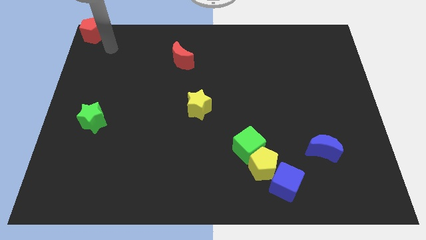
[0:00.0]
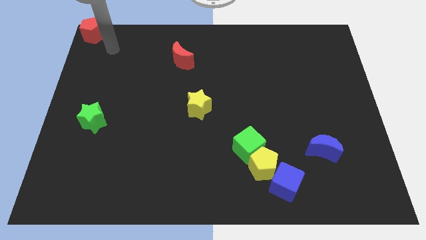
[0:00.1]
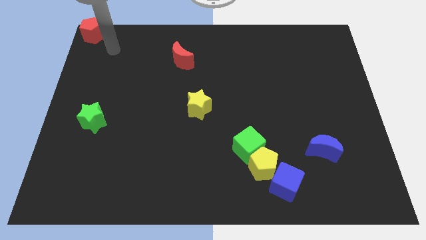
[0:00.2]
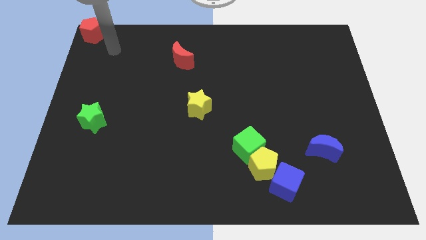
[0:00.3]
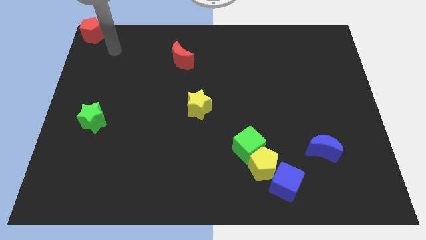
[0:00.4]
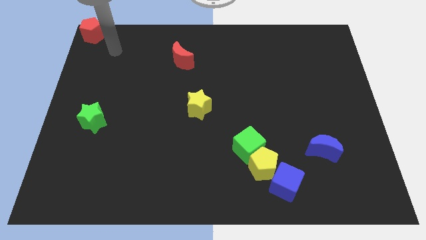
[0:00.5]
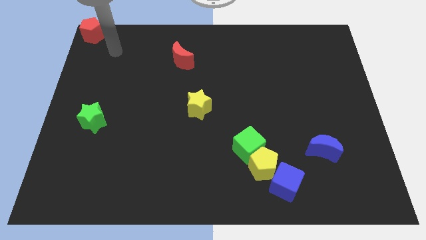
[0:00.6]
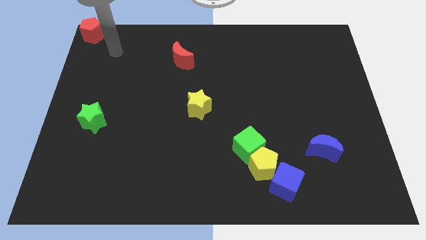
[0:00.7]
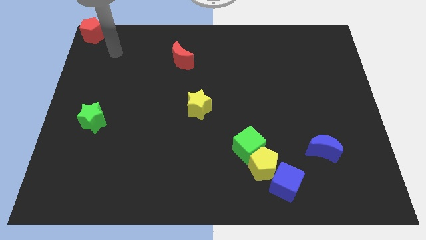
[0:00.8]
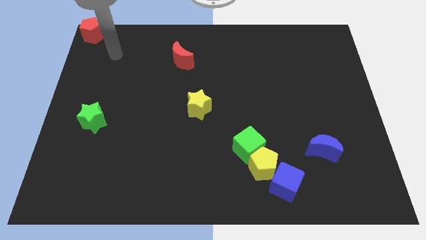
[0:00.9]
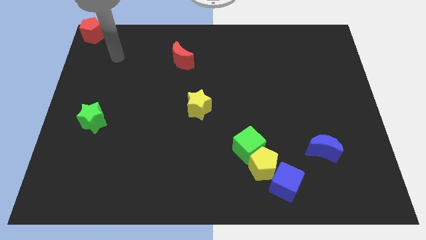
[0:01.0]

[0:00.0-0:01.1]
slide your arm away from red pentagon

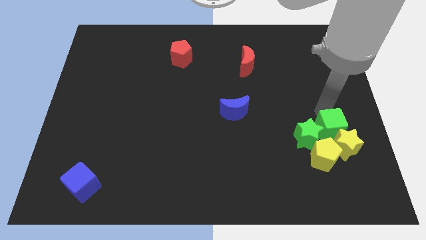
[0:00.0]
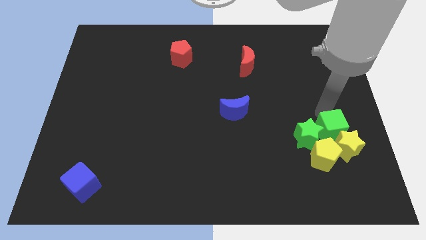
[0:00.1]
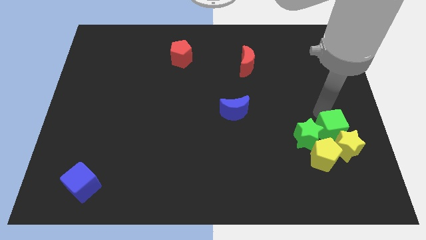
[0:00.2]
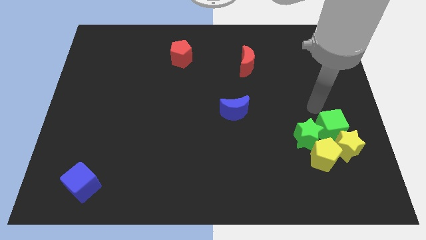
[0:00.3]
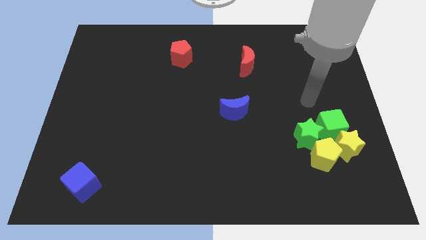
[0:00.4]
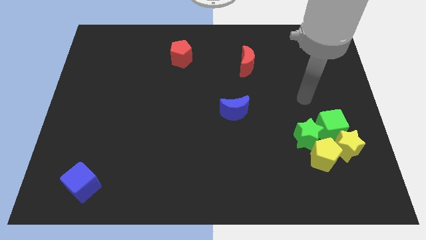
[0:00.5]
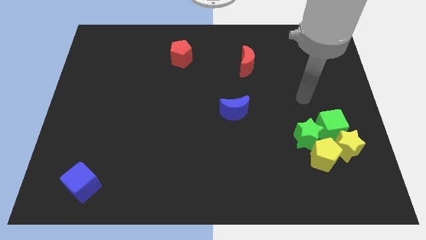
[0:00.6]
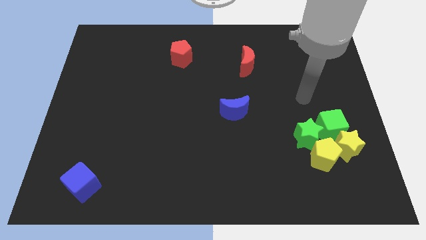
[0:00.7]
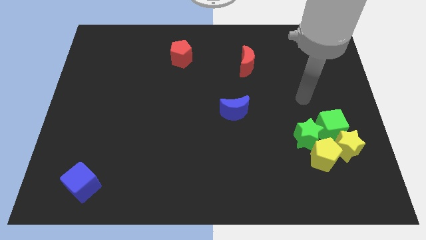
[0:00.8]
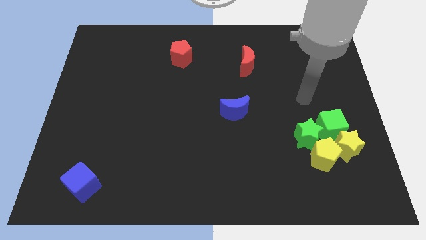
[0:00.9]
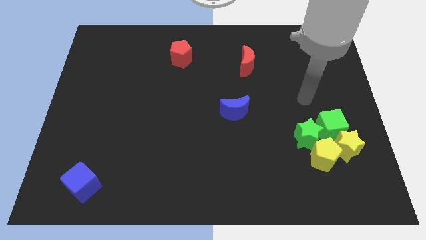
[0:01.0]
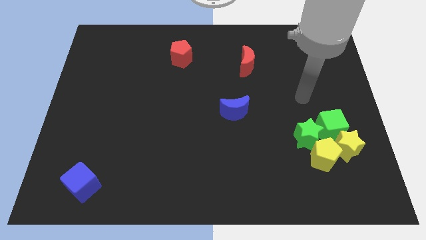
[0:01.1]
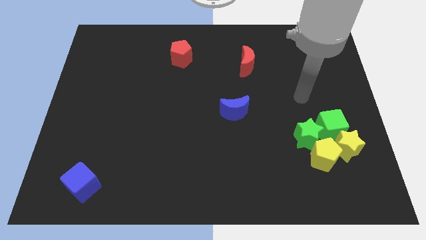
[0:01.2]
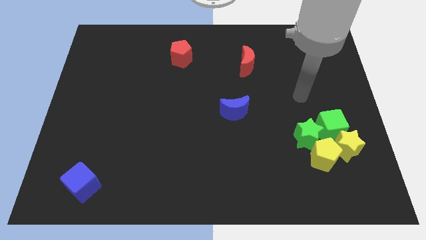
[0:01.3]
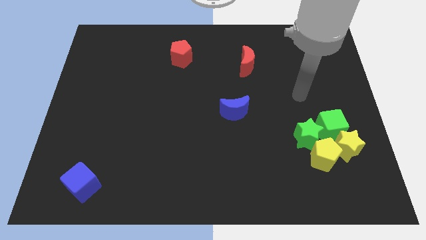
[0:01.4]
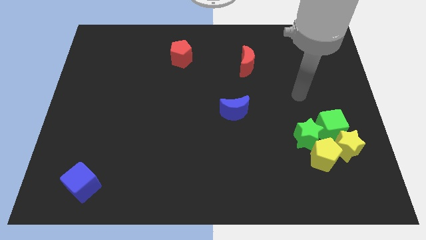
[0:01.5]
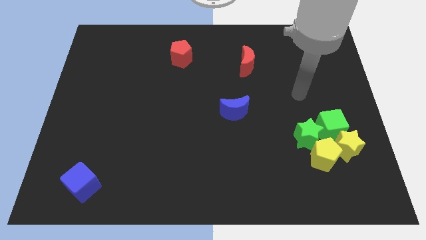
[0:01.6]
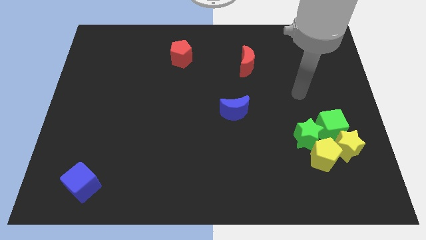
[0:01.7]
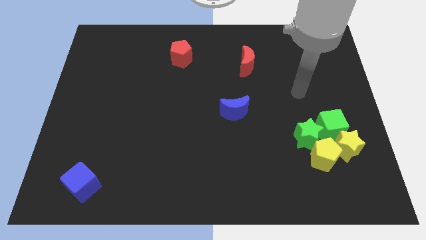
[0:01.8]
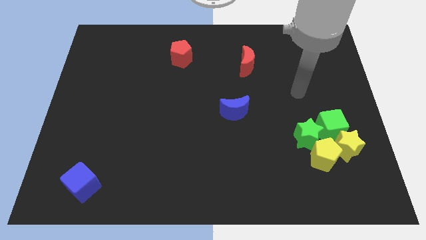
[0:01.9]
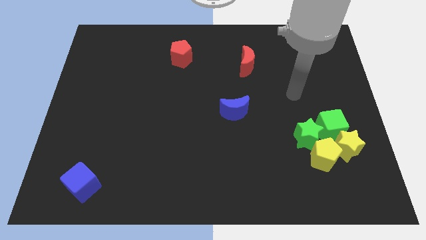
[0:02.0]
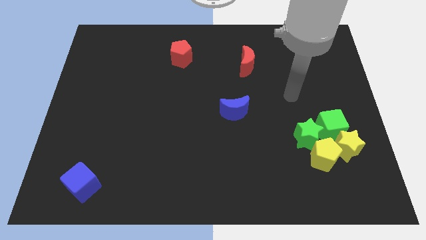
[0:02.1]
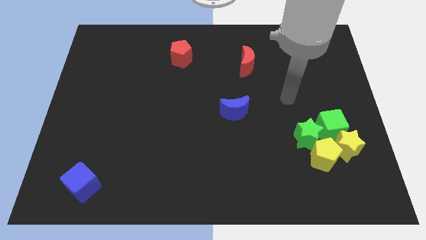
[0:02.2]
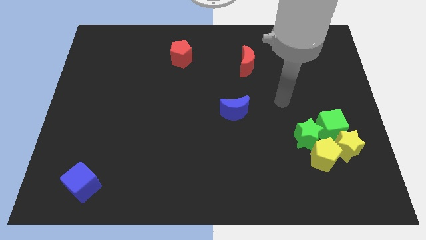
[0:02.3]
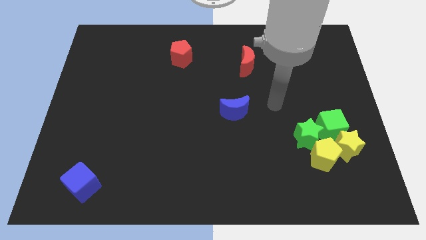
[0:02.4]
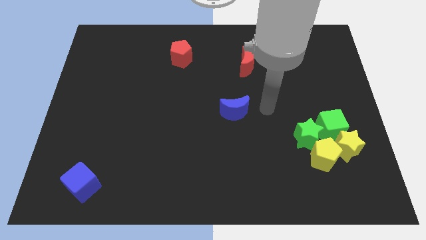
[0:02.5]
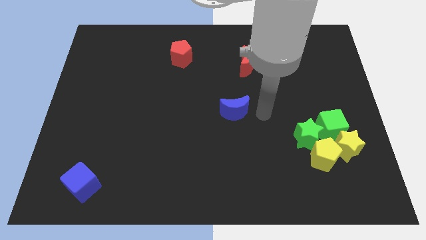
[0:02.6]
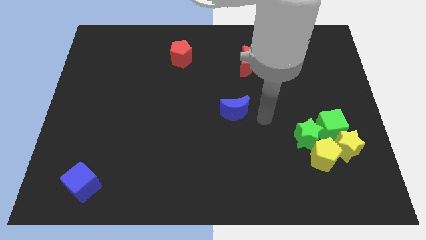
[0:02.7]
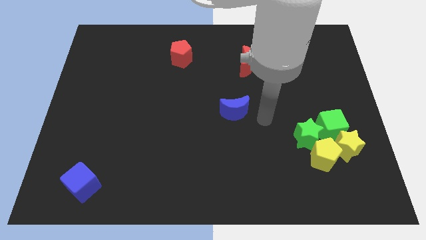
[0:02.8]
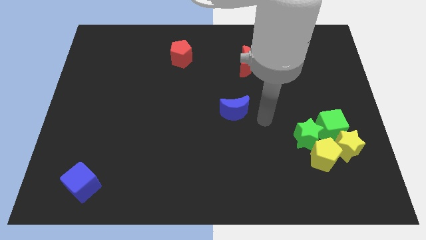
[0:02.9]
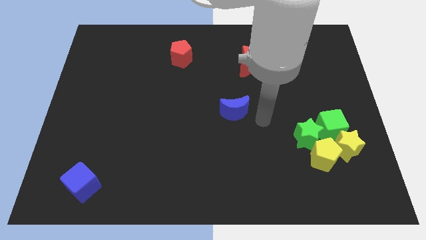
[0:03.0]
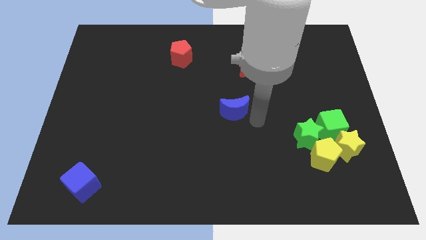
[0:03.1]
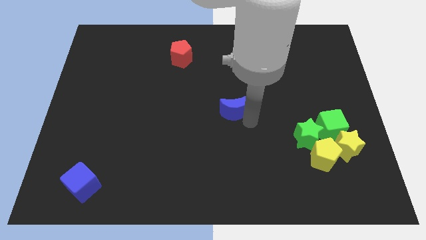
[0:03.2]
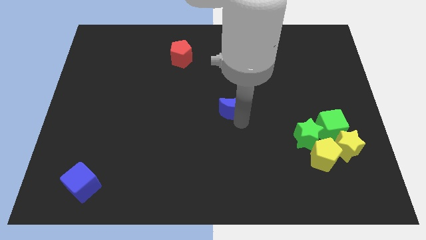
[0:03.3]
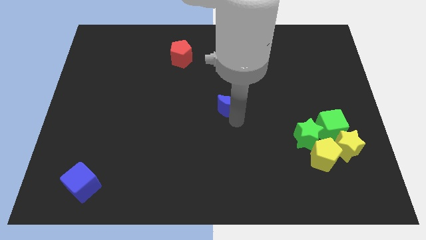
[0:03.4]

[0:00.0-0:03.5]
place the arm down to the blue moon

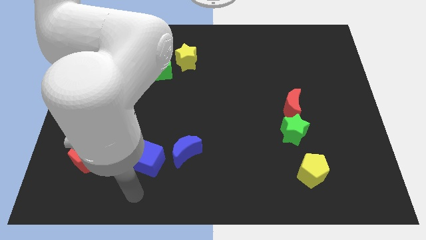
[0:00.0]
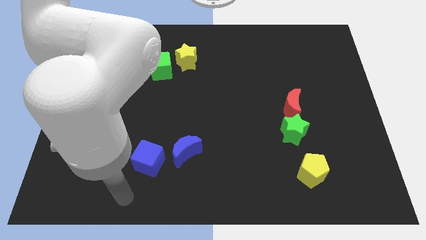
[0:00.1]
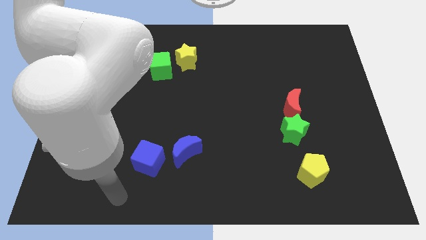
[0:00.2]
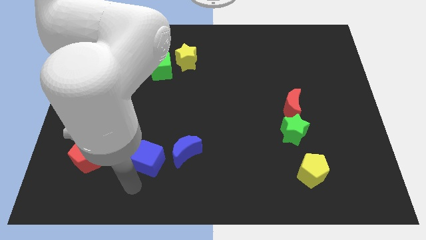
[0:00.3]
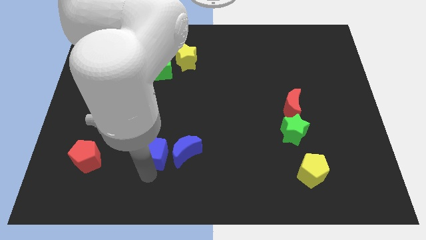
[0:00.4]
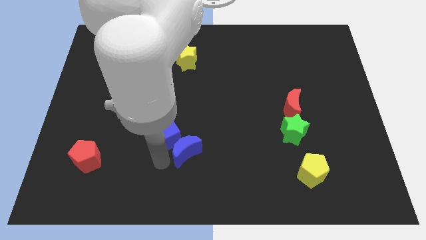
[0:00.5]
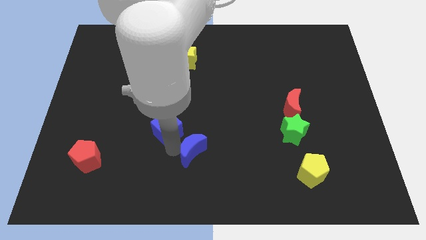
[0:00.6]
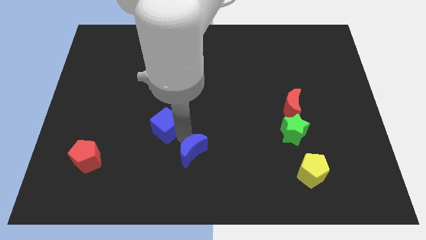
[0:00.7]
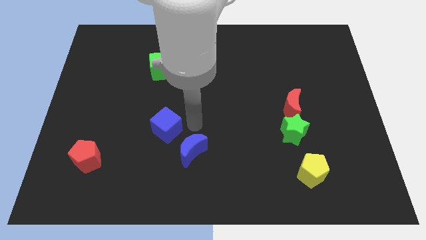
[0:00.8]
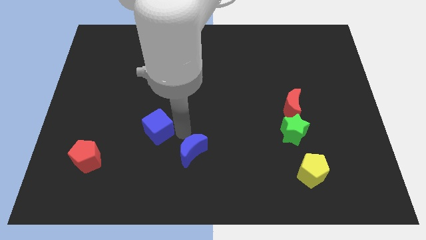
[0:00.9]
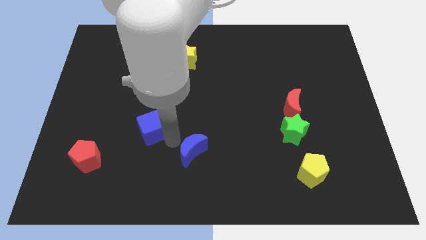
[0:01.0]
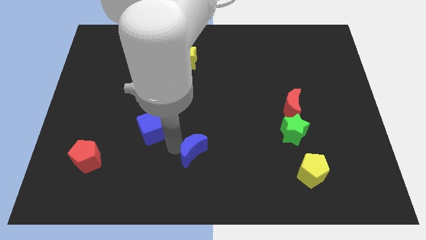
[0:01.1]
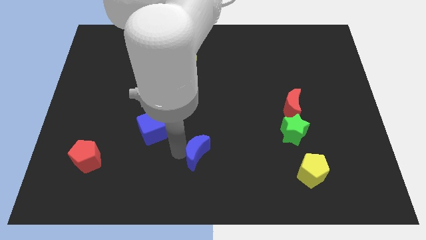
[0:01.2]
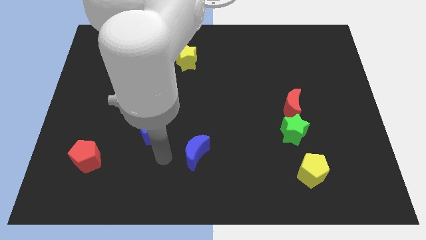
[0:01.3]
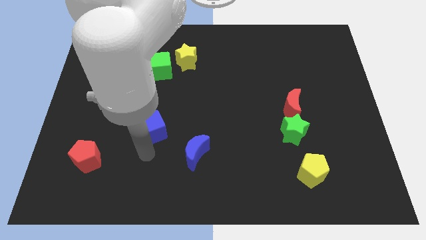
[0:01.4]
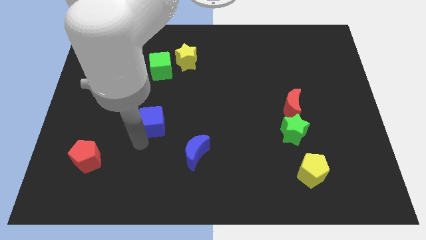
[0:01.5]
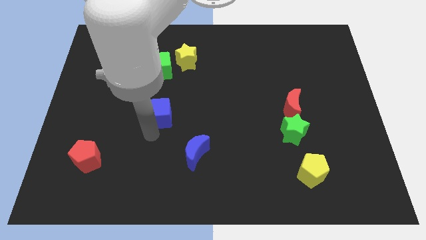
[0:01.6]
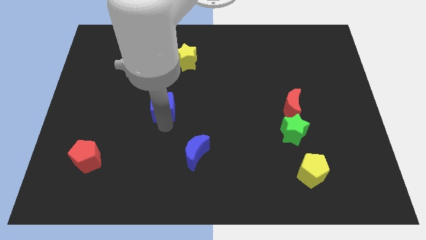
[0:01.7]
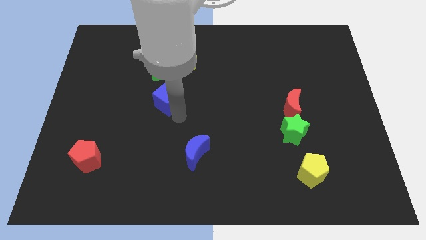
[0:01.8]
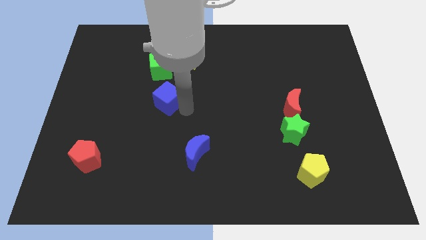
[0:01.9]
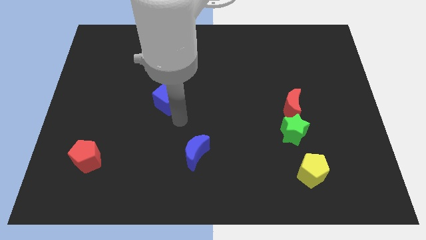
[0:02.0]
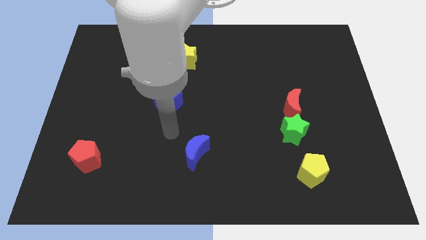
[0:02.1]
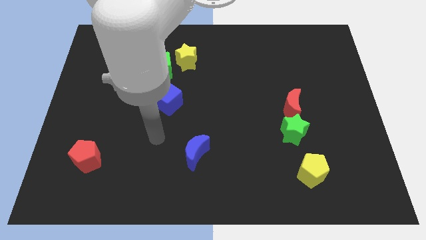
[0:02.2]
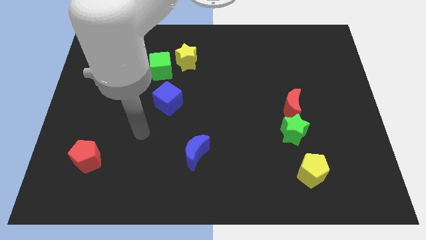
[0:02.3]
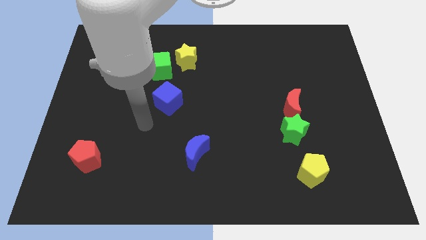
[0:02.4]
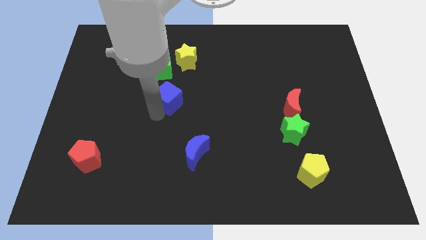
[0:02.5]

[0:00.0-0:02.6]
place the blue cube below the green cube

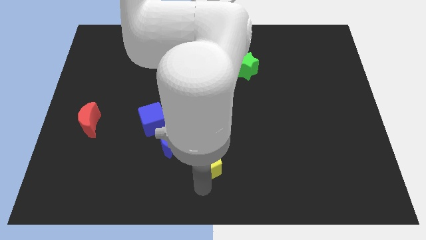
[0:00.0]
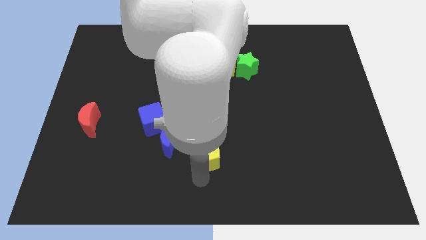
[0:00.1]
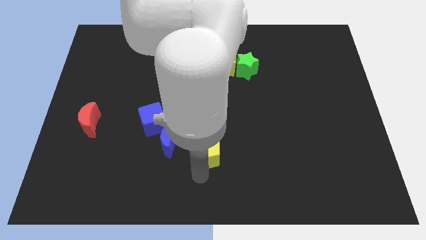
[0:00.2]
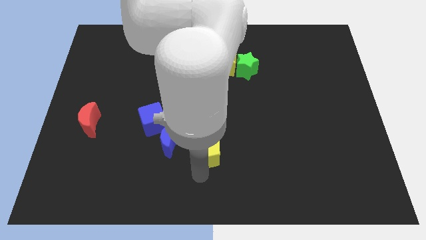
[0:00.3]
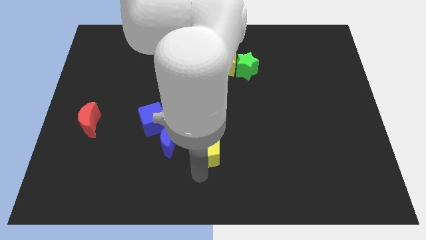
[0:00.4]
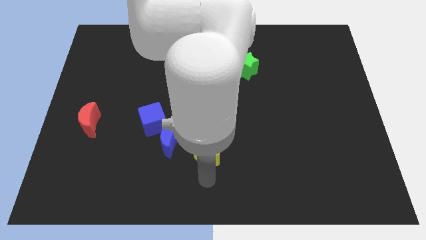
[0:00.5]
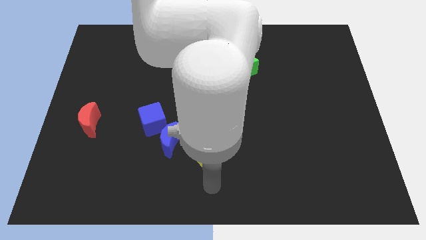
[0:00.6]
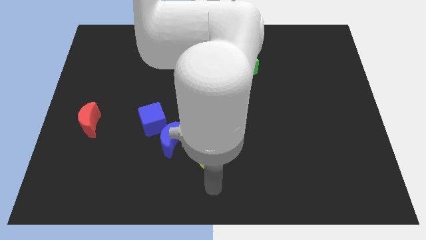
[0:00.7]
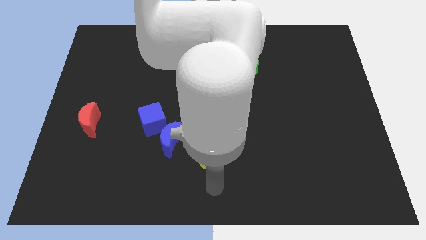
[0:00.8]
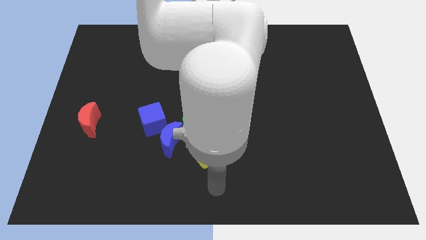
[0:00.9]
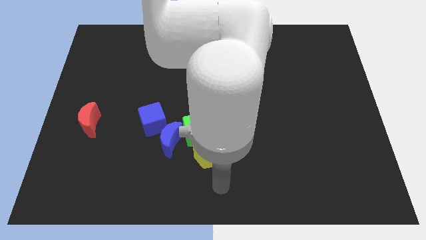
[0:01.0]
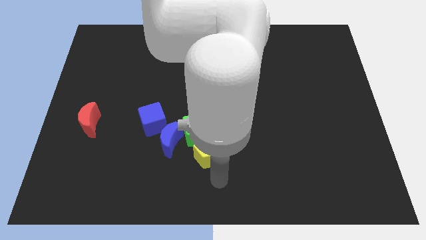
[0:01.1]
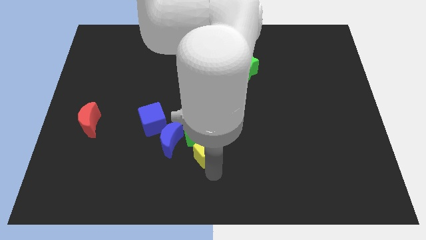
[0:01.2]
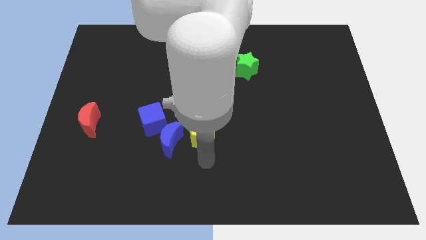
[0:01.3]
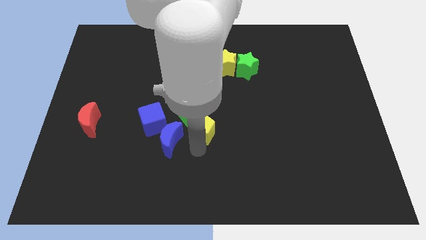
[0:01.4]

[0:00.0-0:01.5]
move the yellow pentagon to the bottom of the green cube

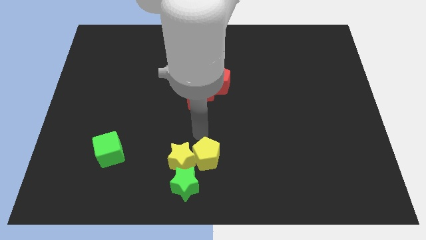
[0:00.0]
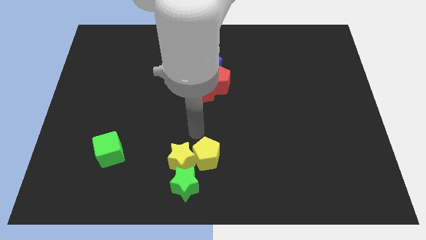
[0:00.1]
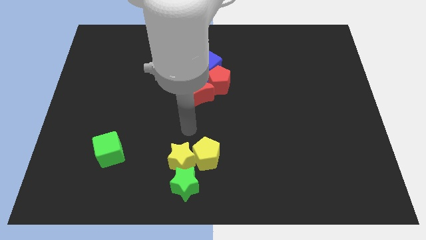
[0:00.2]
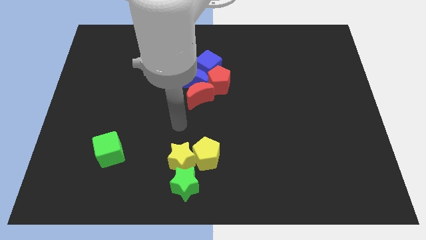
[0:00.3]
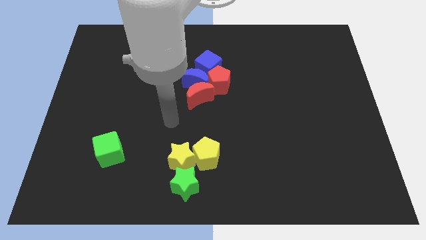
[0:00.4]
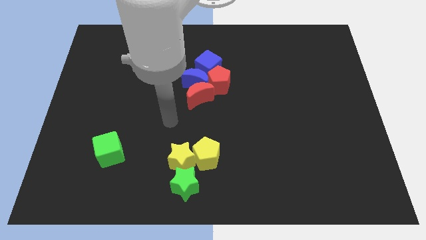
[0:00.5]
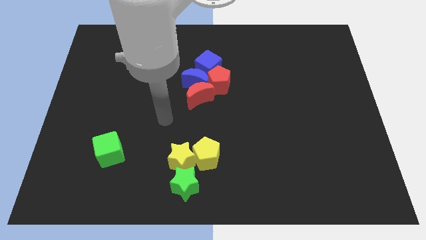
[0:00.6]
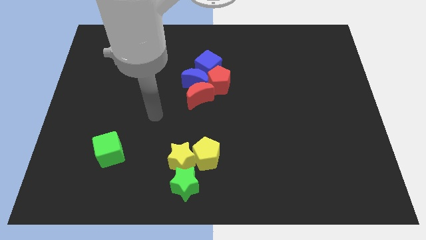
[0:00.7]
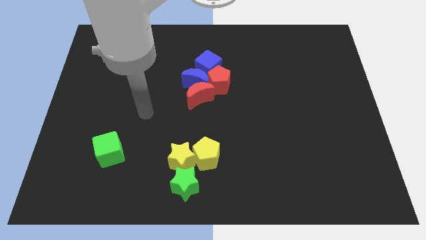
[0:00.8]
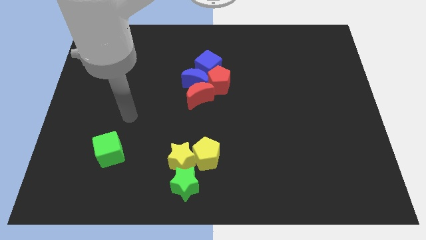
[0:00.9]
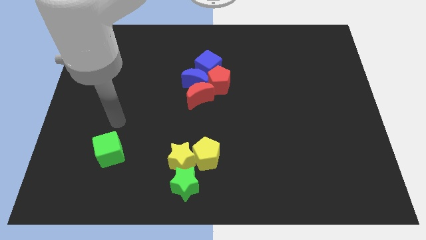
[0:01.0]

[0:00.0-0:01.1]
move the arm away from the yellow pentagon
